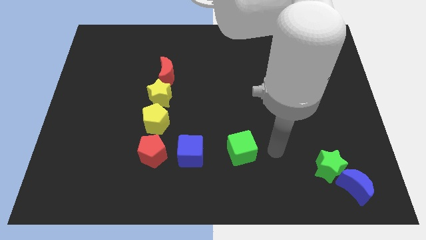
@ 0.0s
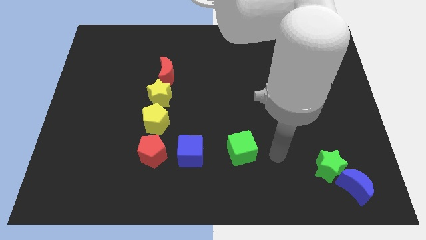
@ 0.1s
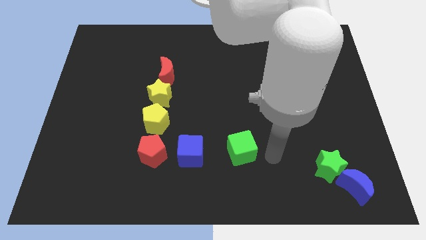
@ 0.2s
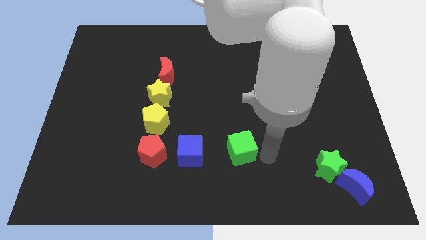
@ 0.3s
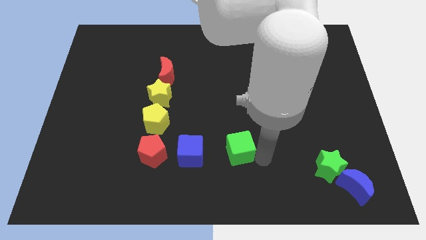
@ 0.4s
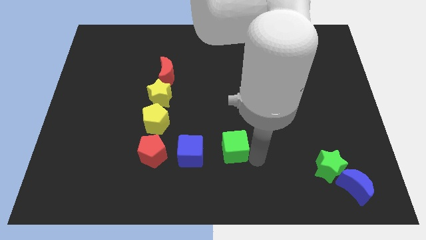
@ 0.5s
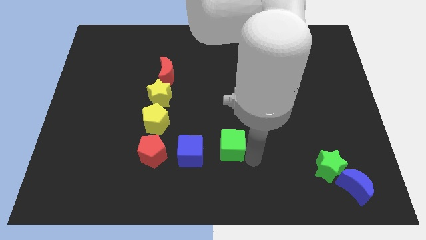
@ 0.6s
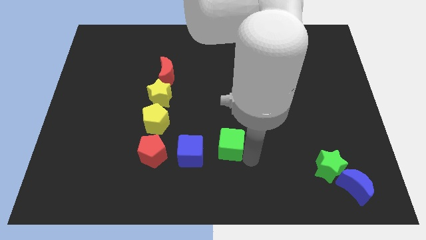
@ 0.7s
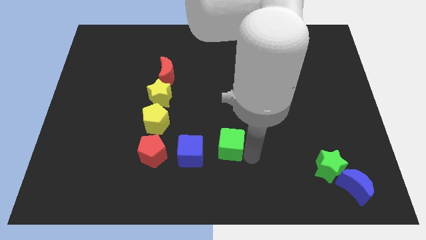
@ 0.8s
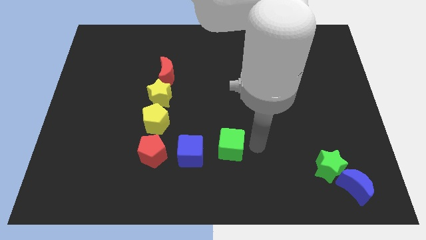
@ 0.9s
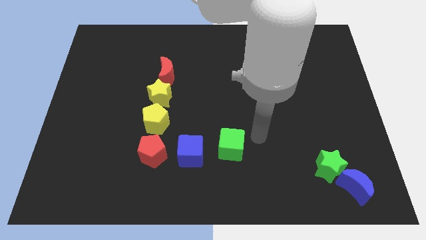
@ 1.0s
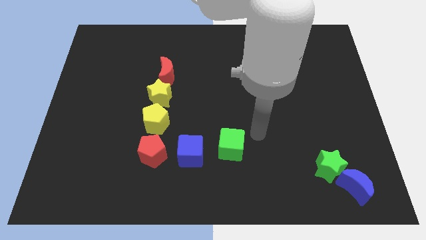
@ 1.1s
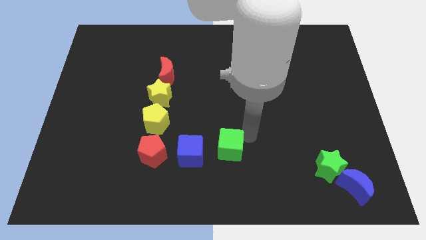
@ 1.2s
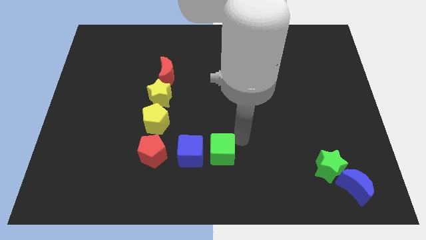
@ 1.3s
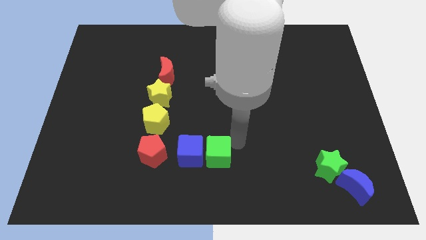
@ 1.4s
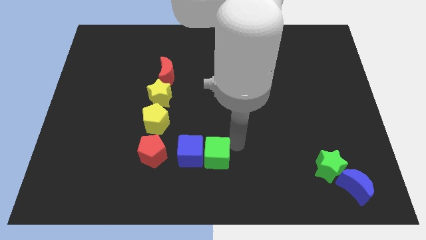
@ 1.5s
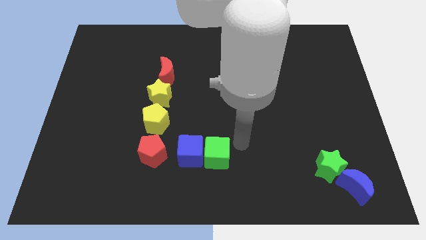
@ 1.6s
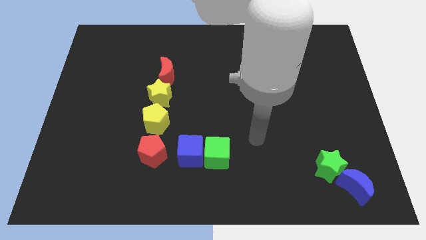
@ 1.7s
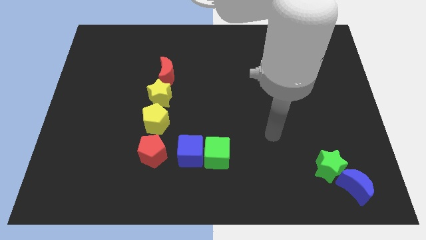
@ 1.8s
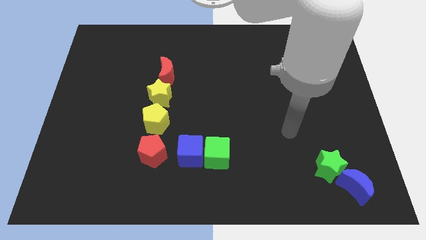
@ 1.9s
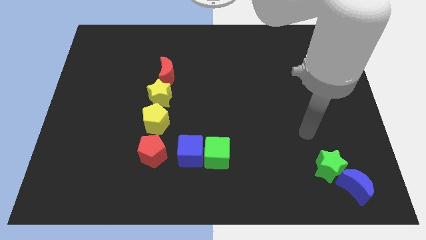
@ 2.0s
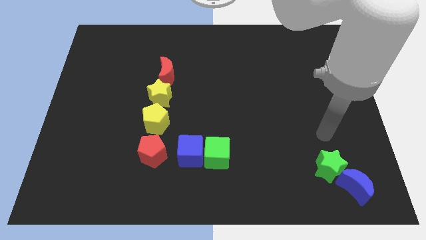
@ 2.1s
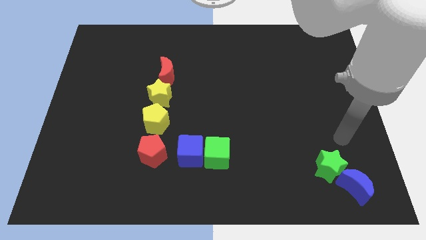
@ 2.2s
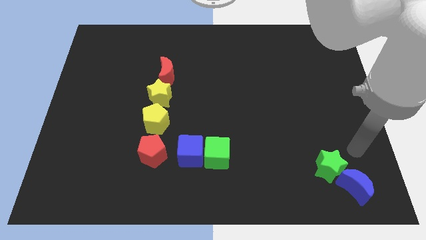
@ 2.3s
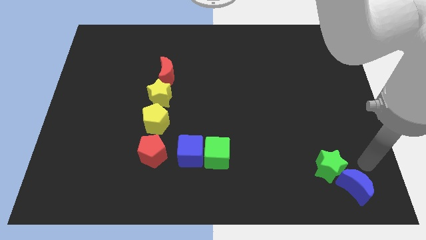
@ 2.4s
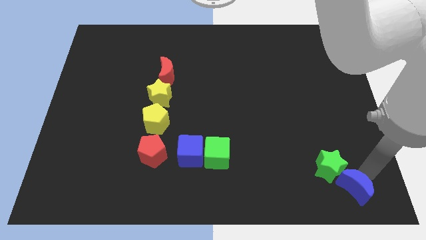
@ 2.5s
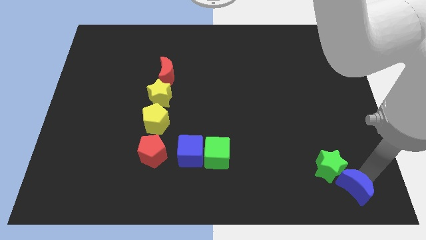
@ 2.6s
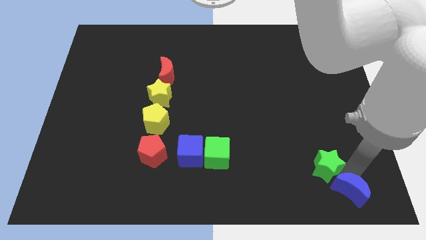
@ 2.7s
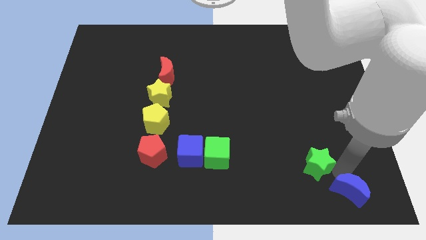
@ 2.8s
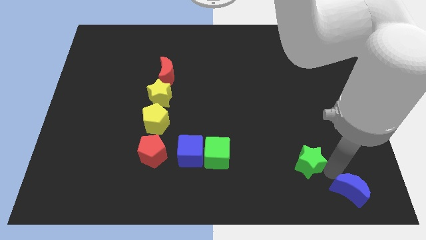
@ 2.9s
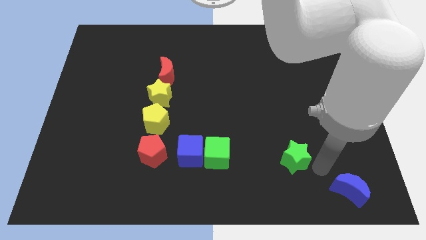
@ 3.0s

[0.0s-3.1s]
separate green star from blue moon

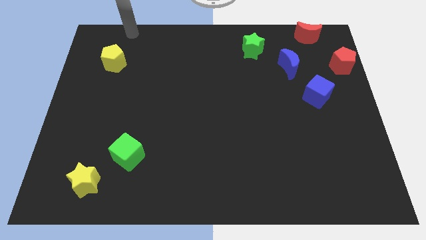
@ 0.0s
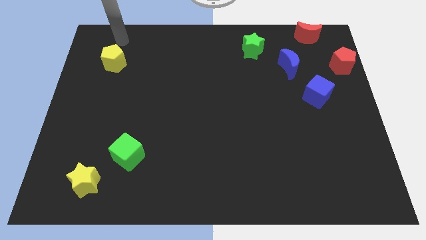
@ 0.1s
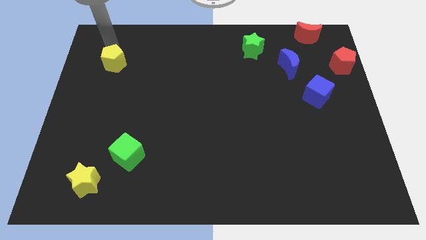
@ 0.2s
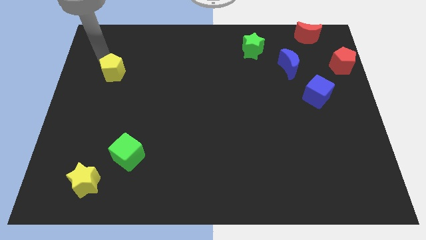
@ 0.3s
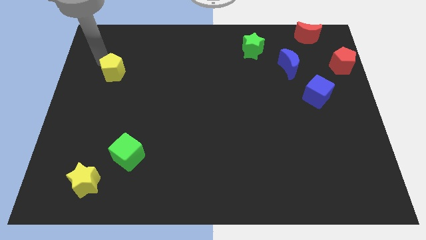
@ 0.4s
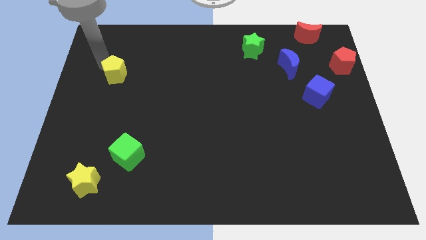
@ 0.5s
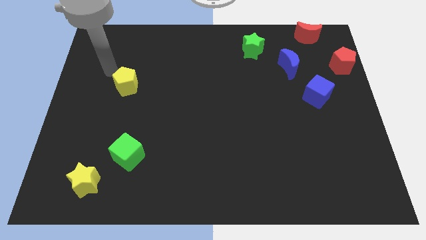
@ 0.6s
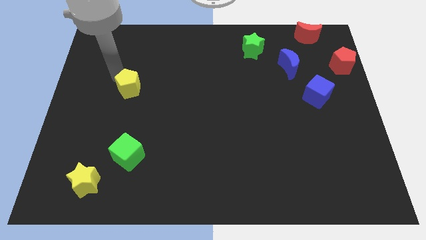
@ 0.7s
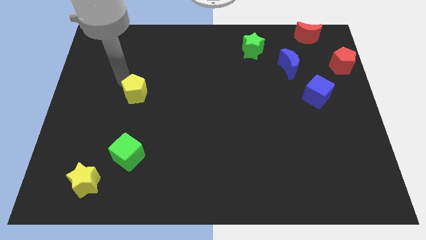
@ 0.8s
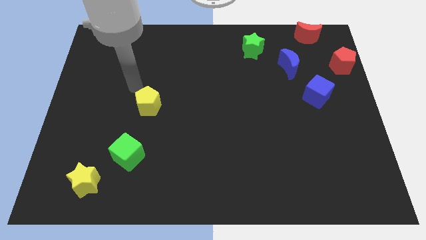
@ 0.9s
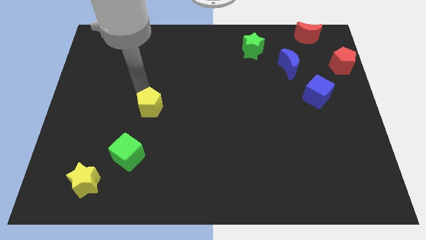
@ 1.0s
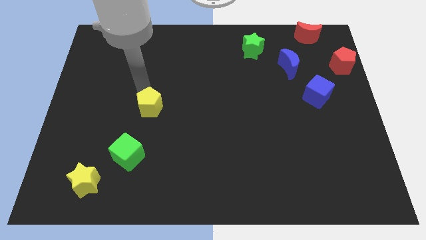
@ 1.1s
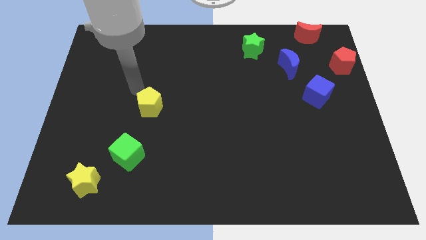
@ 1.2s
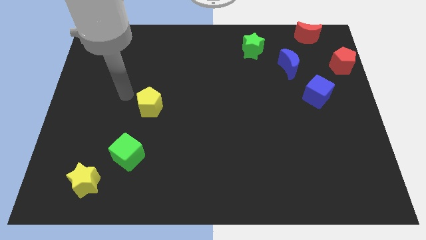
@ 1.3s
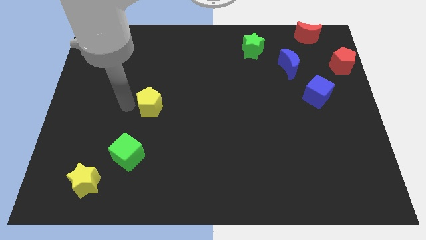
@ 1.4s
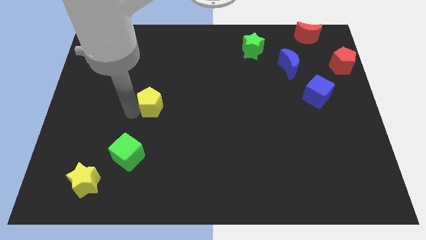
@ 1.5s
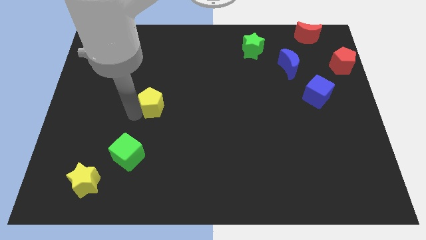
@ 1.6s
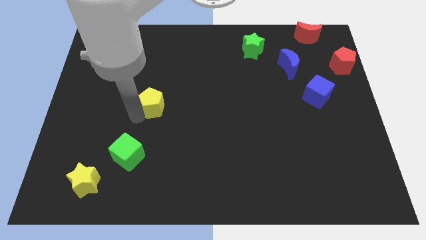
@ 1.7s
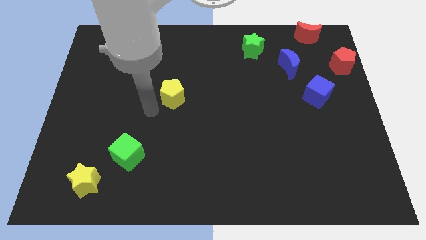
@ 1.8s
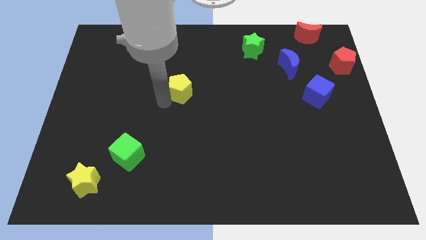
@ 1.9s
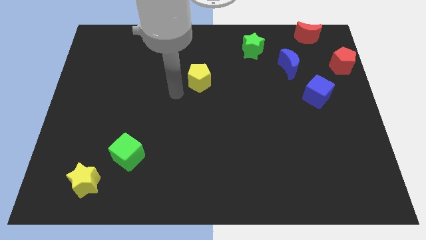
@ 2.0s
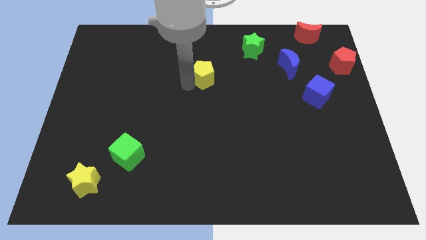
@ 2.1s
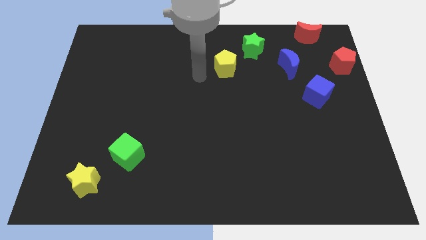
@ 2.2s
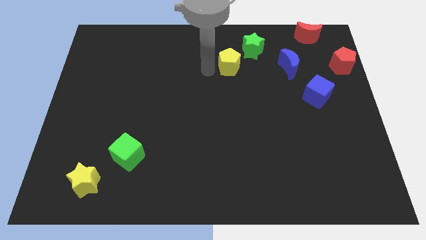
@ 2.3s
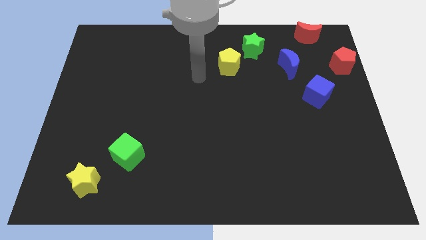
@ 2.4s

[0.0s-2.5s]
push the yellow pentagon towards the green star

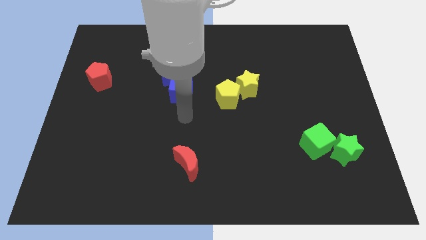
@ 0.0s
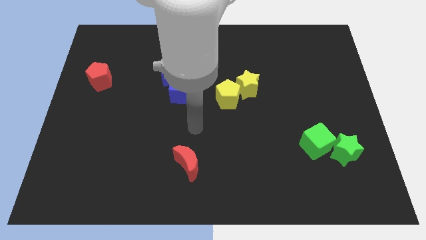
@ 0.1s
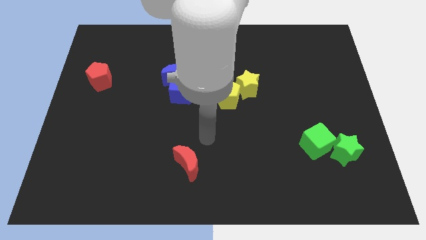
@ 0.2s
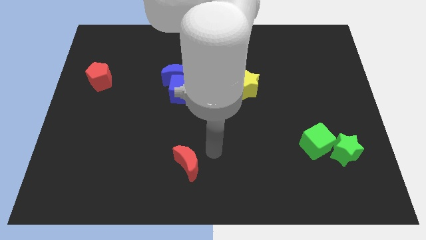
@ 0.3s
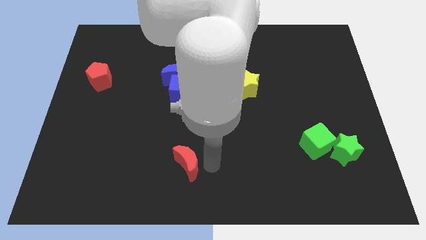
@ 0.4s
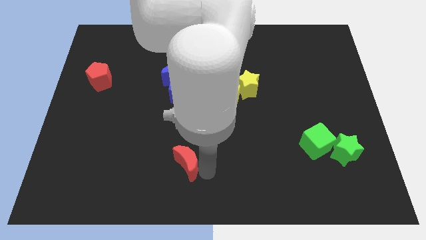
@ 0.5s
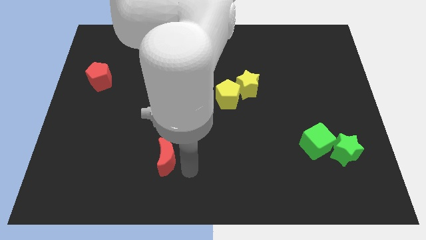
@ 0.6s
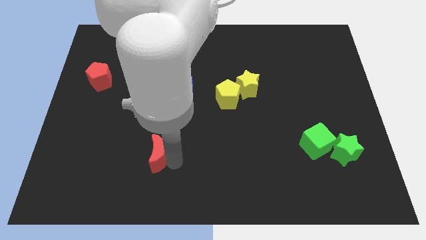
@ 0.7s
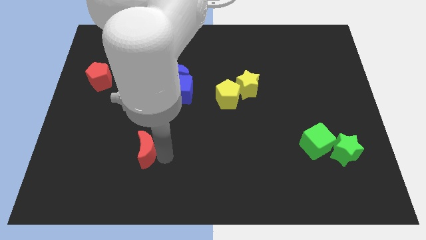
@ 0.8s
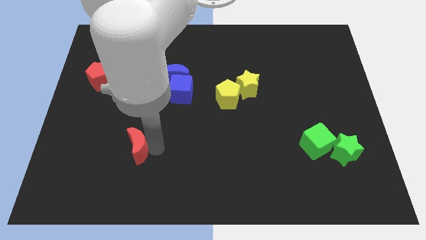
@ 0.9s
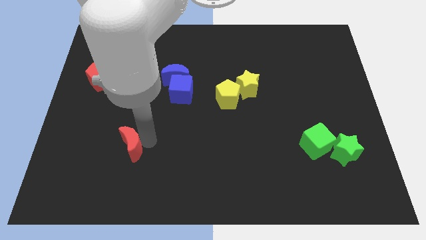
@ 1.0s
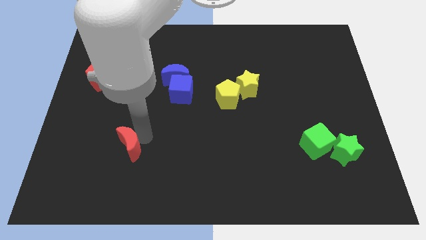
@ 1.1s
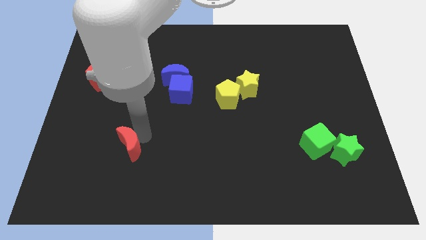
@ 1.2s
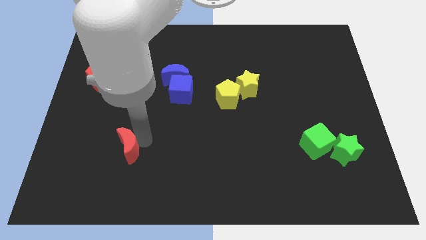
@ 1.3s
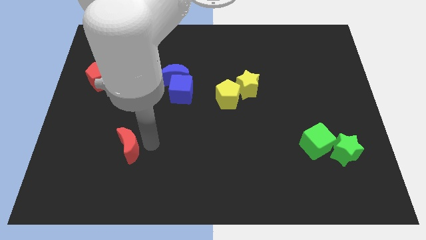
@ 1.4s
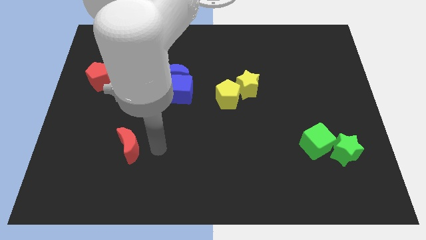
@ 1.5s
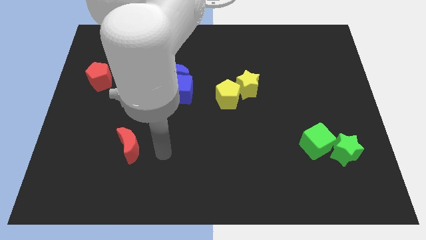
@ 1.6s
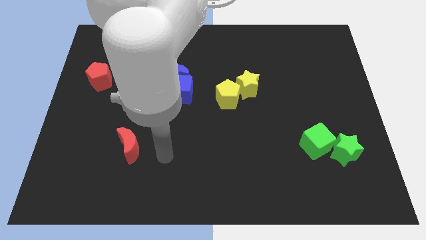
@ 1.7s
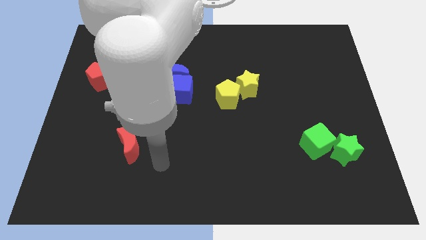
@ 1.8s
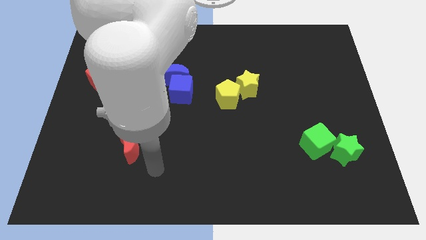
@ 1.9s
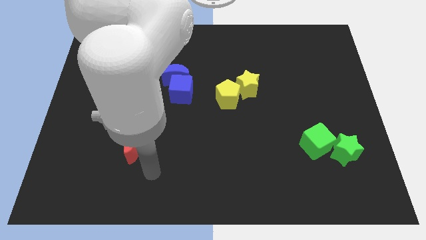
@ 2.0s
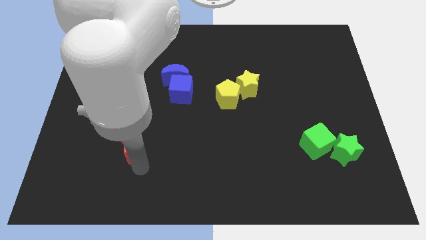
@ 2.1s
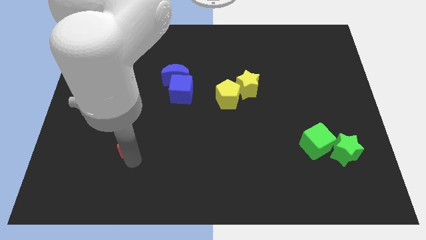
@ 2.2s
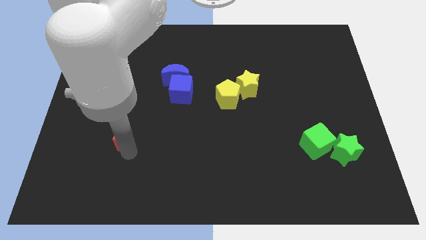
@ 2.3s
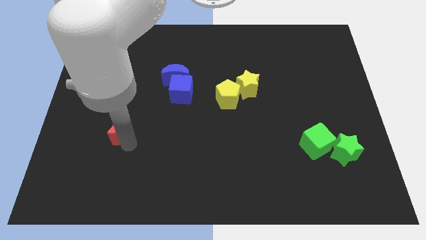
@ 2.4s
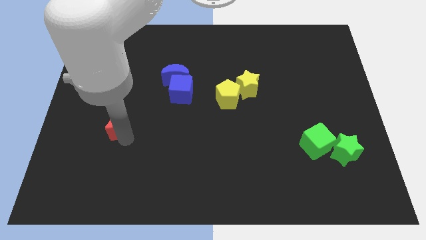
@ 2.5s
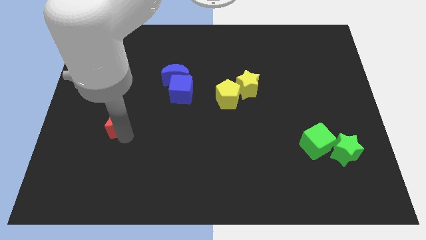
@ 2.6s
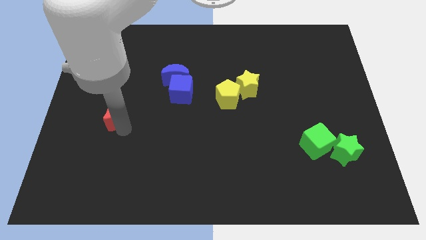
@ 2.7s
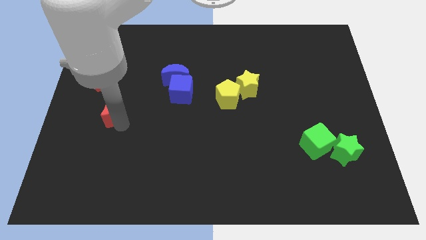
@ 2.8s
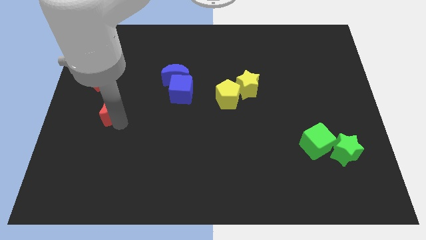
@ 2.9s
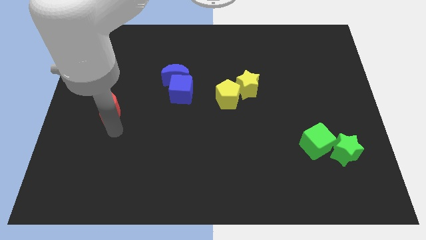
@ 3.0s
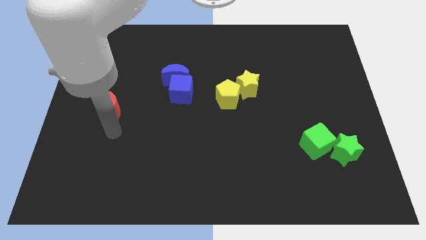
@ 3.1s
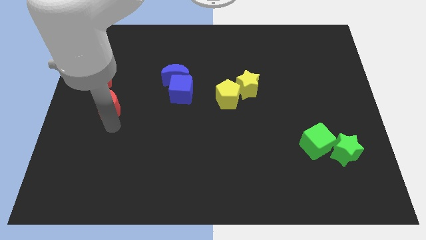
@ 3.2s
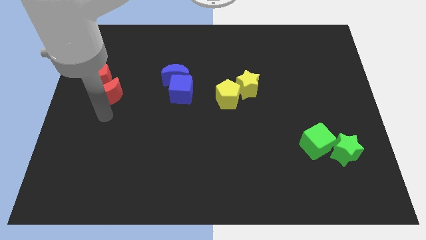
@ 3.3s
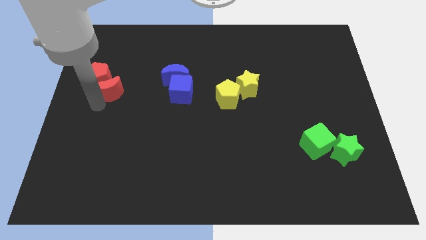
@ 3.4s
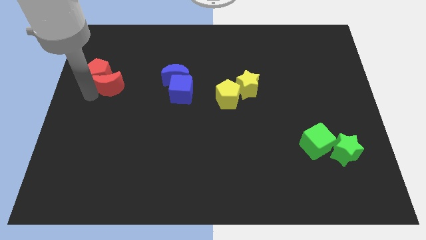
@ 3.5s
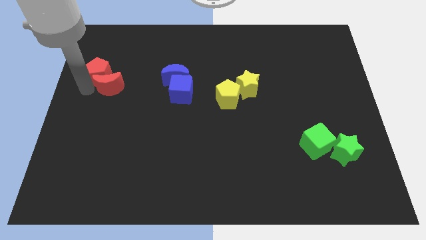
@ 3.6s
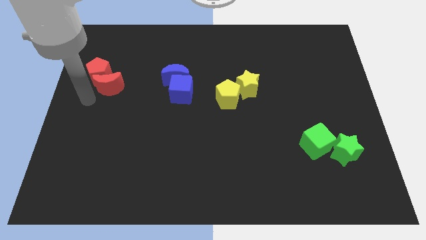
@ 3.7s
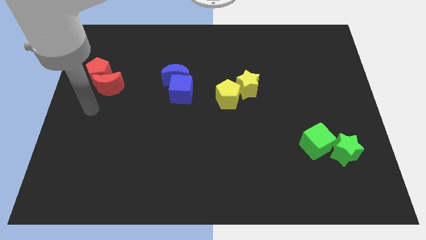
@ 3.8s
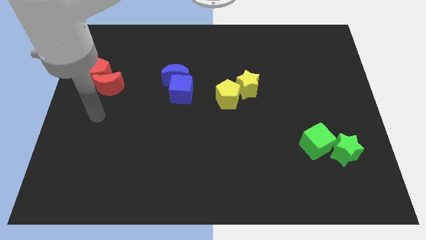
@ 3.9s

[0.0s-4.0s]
move the red crescent into the red pentagon
